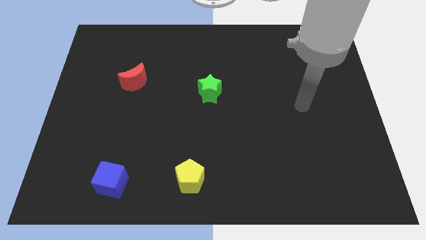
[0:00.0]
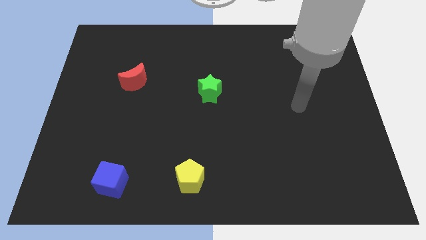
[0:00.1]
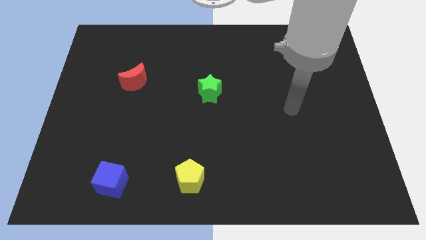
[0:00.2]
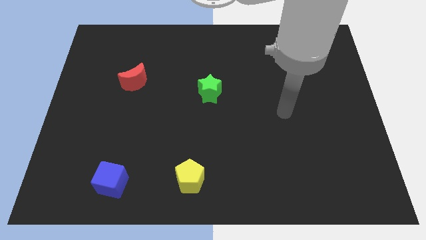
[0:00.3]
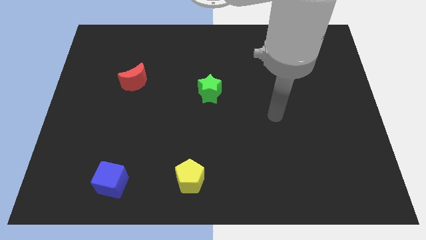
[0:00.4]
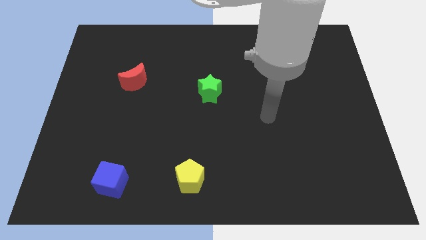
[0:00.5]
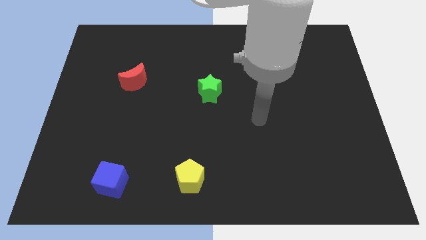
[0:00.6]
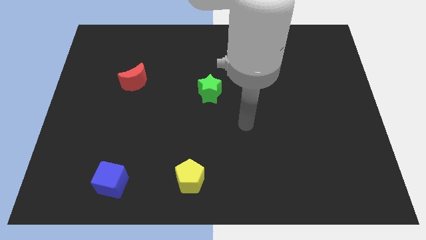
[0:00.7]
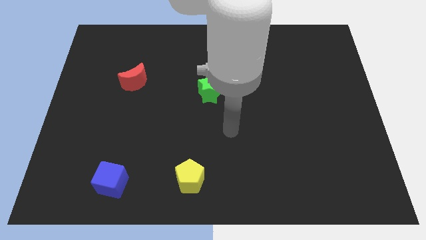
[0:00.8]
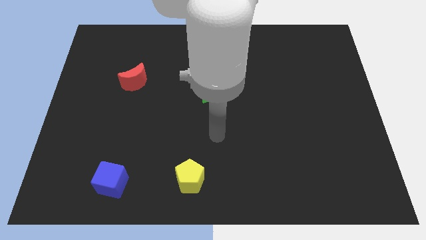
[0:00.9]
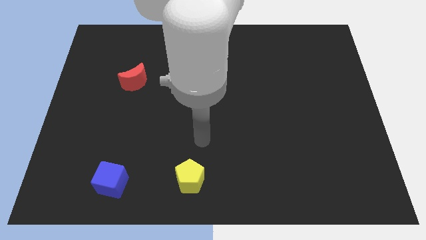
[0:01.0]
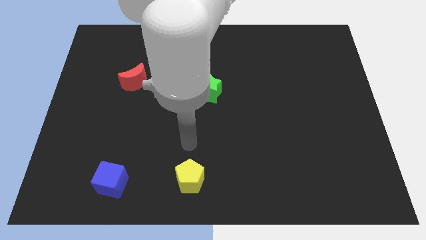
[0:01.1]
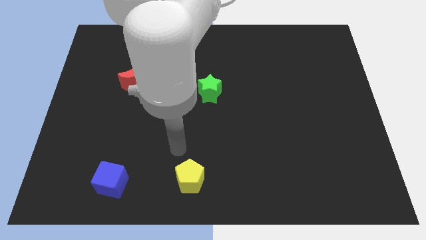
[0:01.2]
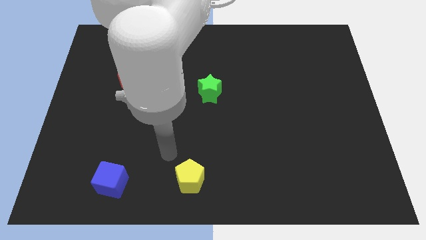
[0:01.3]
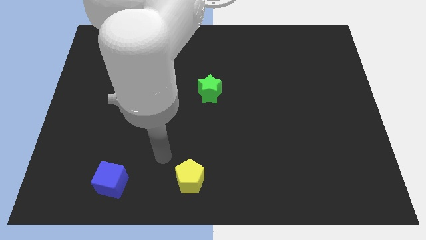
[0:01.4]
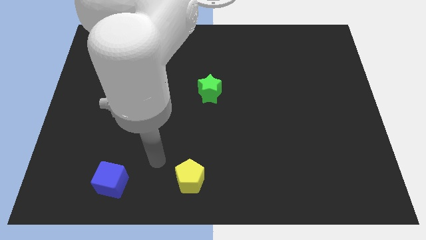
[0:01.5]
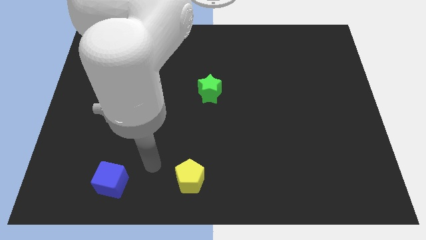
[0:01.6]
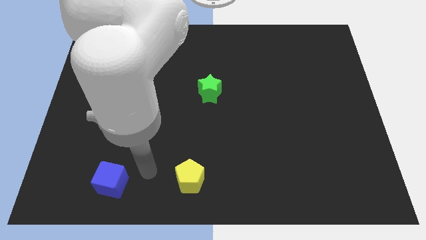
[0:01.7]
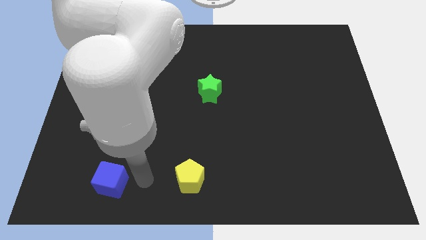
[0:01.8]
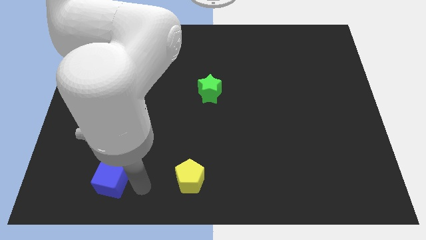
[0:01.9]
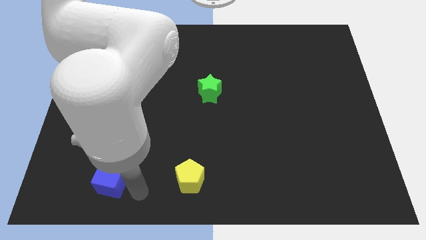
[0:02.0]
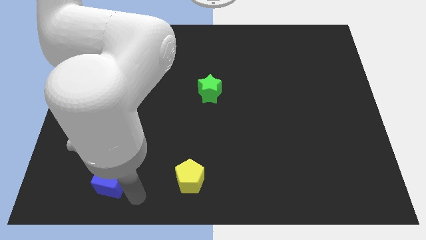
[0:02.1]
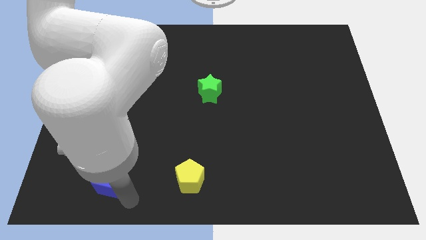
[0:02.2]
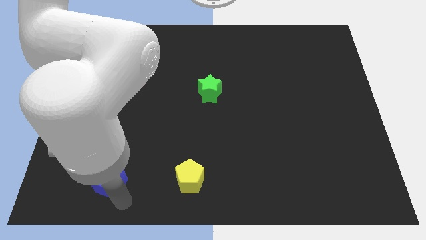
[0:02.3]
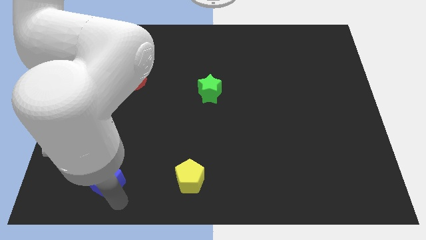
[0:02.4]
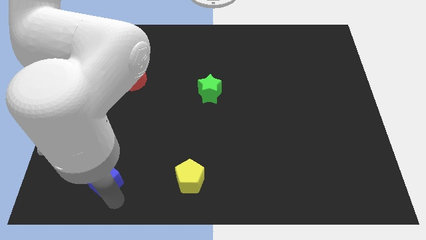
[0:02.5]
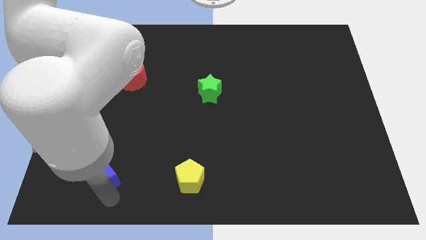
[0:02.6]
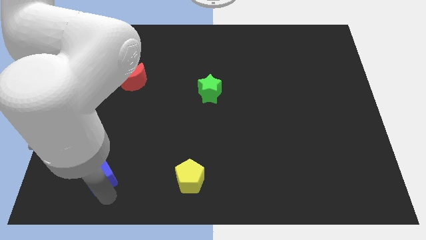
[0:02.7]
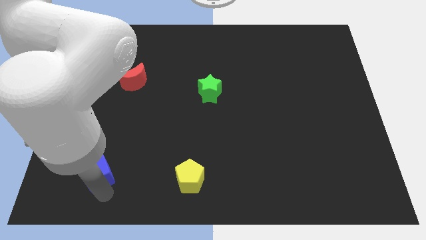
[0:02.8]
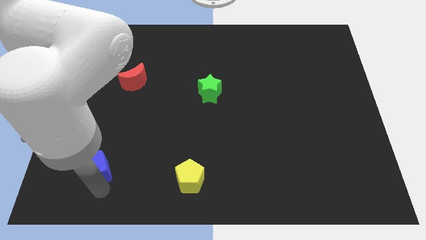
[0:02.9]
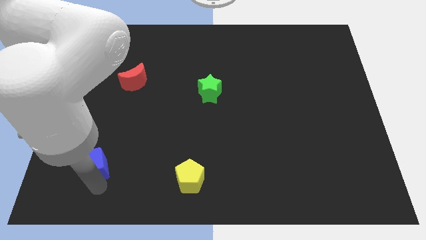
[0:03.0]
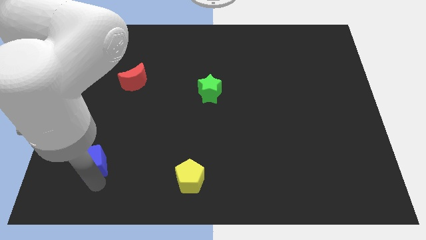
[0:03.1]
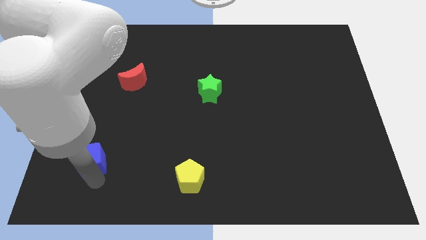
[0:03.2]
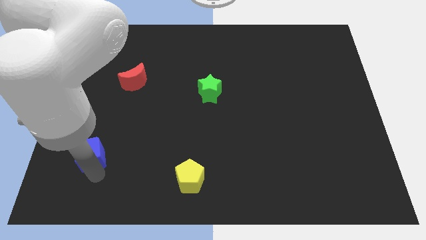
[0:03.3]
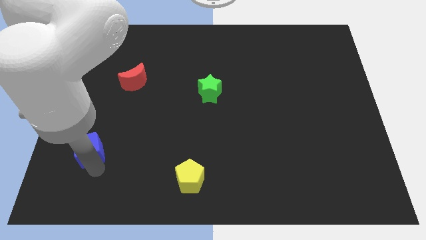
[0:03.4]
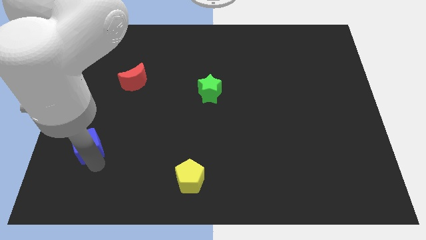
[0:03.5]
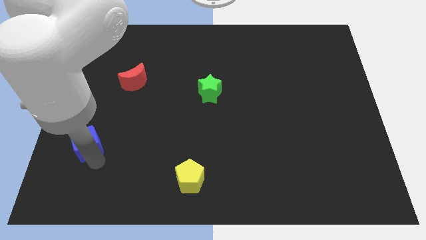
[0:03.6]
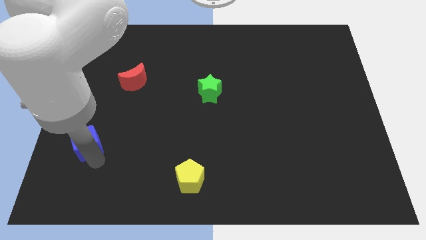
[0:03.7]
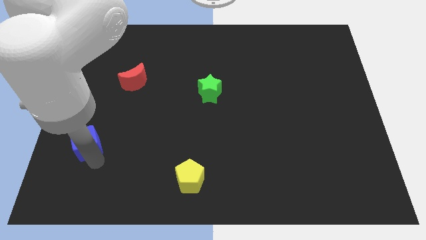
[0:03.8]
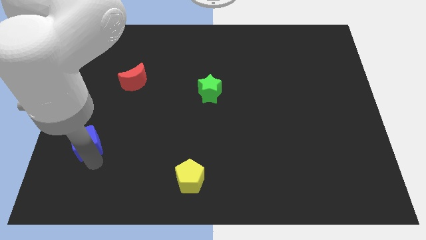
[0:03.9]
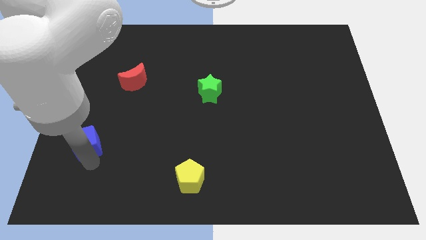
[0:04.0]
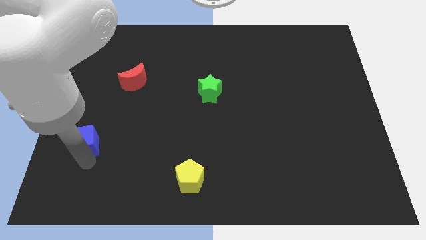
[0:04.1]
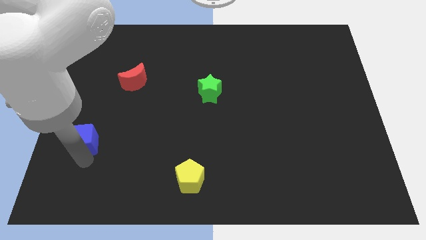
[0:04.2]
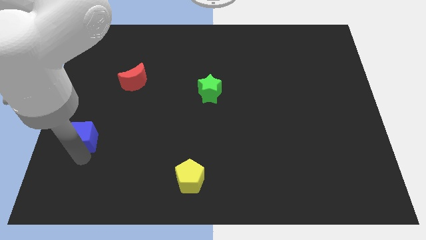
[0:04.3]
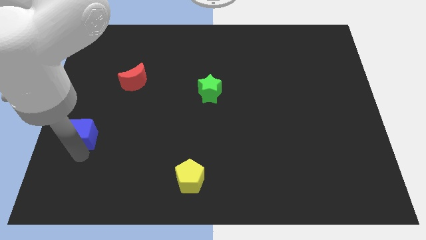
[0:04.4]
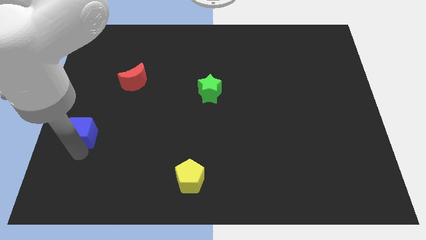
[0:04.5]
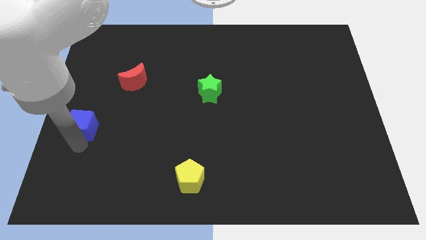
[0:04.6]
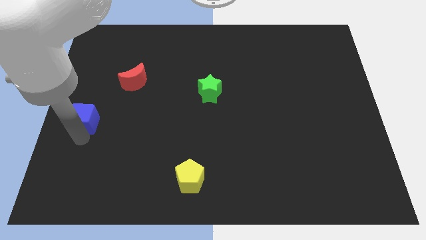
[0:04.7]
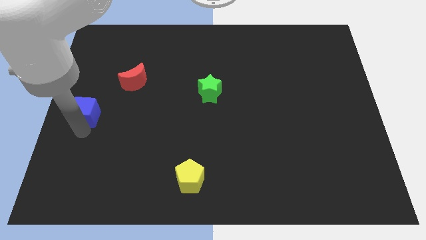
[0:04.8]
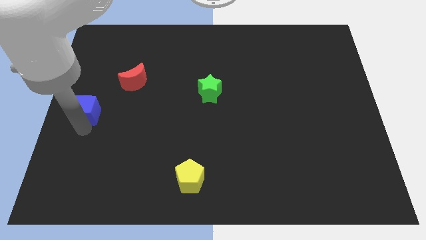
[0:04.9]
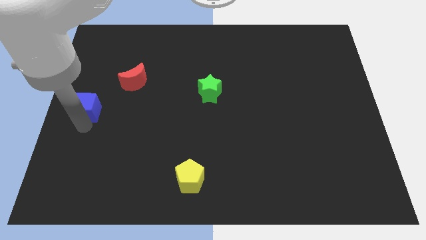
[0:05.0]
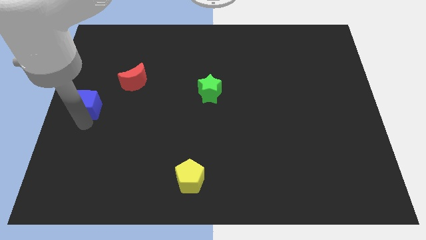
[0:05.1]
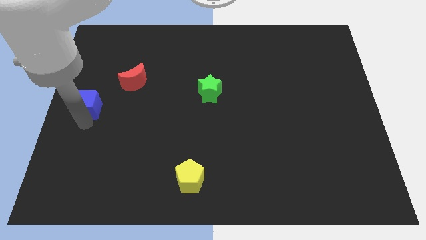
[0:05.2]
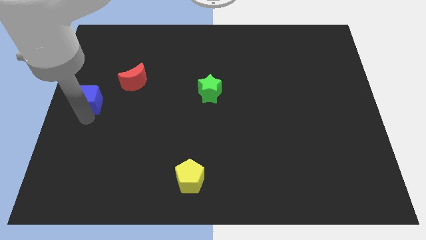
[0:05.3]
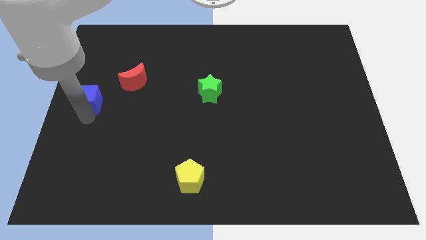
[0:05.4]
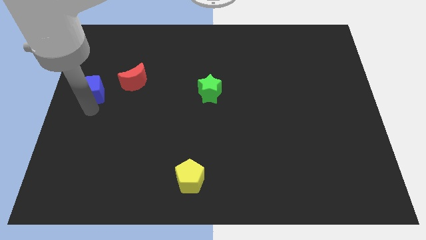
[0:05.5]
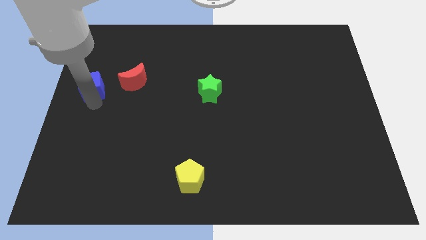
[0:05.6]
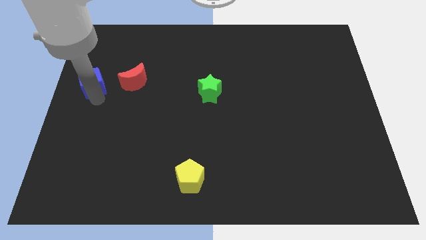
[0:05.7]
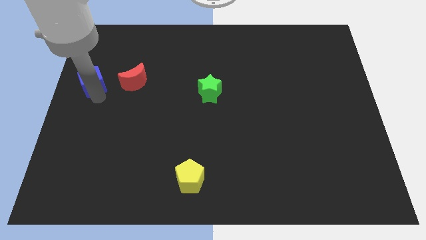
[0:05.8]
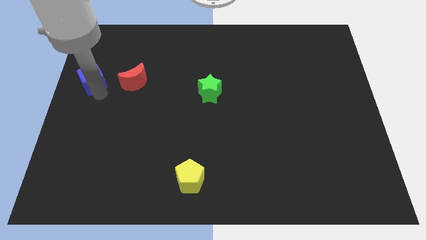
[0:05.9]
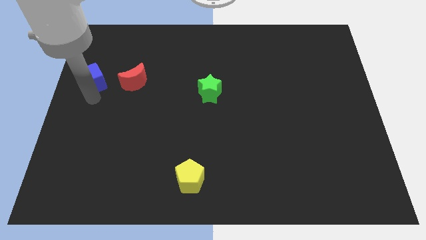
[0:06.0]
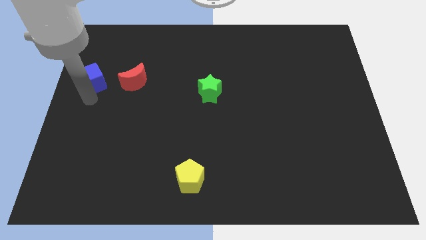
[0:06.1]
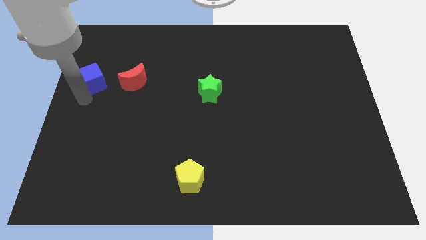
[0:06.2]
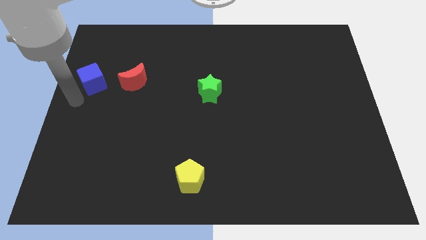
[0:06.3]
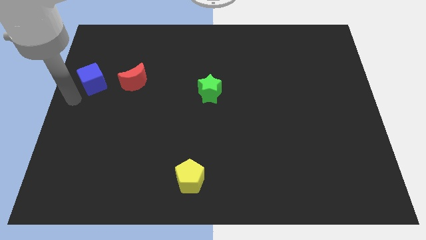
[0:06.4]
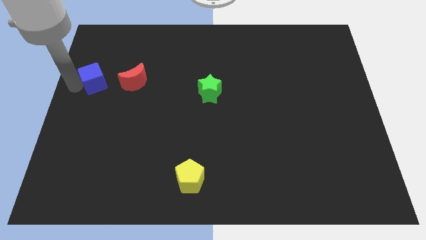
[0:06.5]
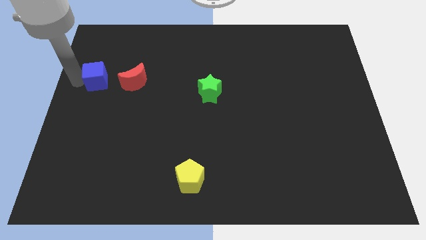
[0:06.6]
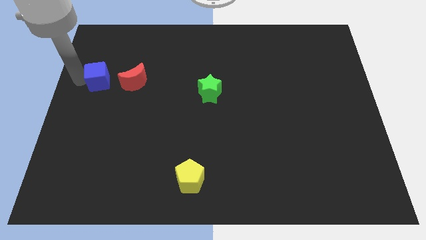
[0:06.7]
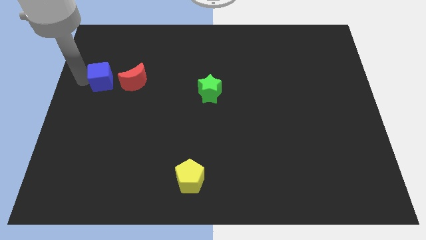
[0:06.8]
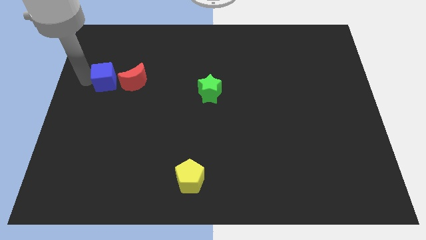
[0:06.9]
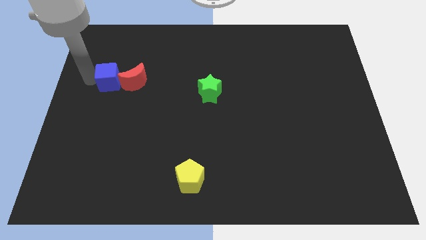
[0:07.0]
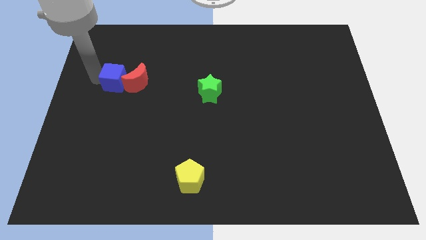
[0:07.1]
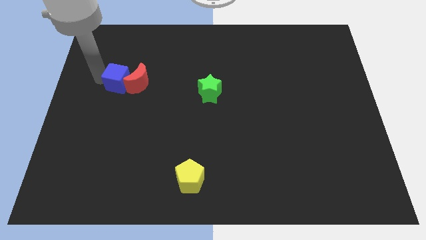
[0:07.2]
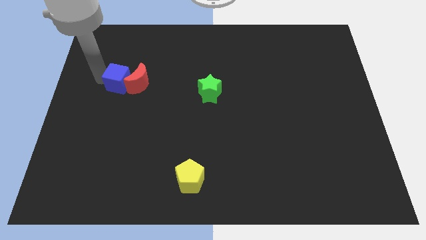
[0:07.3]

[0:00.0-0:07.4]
move the blue cube close to the red moon

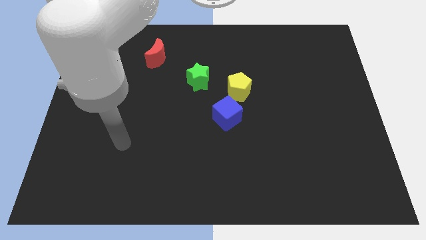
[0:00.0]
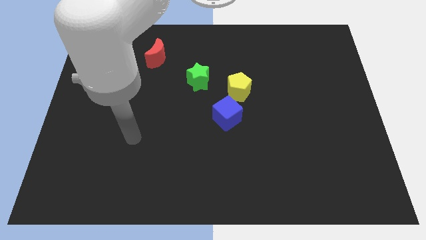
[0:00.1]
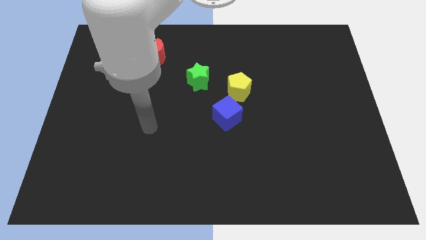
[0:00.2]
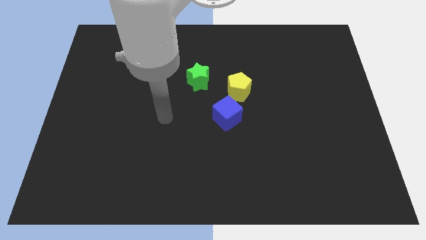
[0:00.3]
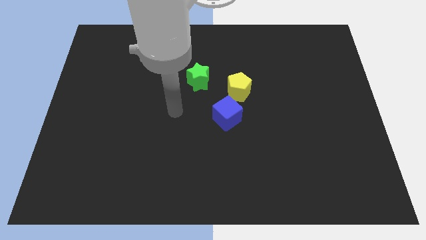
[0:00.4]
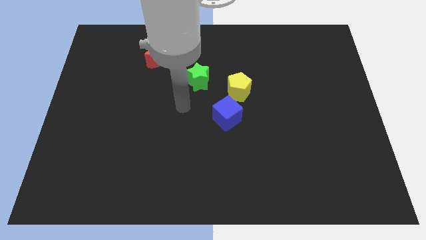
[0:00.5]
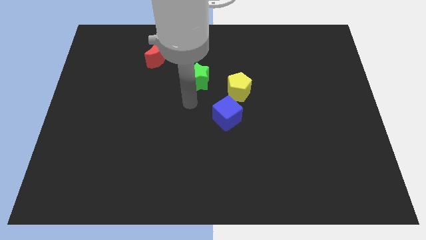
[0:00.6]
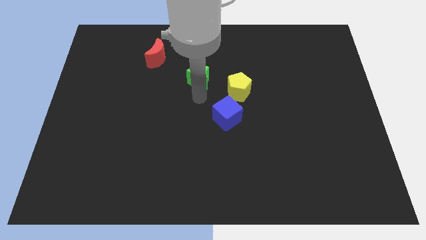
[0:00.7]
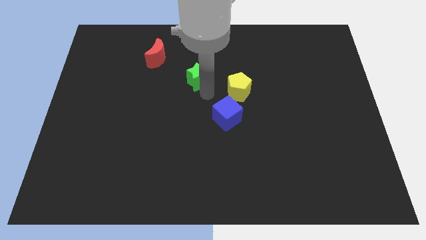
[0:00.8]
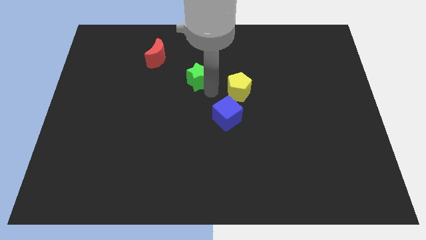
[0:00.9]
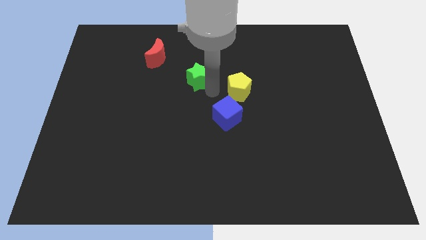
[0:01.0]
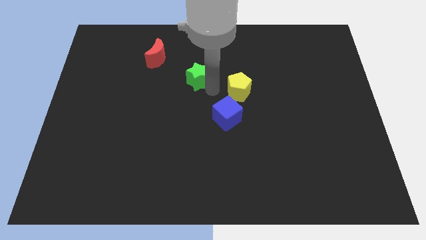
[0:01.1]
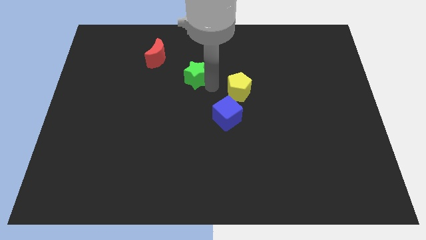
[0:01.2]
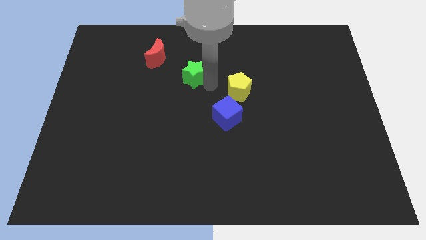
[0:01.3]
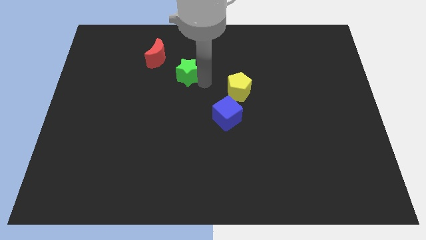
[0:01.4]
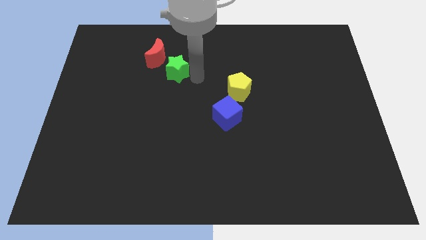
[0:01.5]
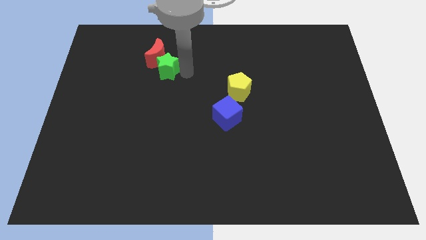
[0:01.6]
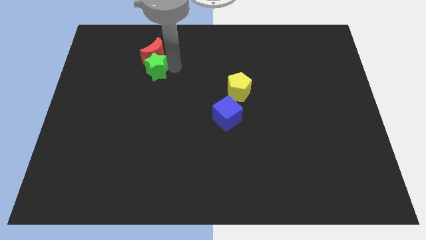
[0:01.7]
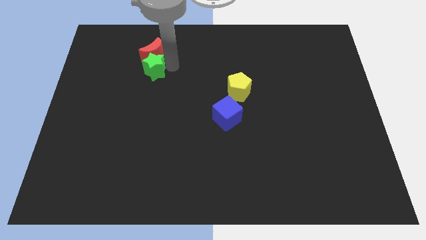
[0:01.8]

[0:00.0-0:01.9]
put the green star towards the moon
